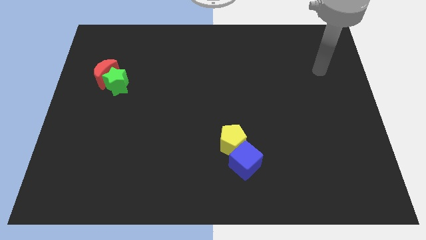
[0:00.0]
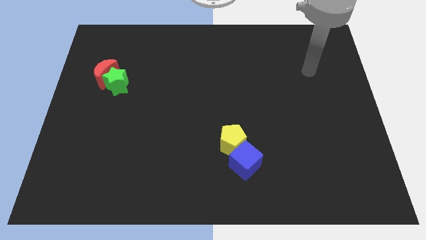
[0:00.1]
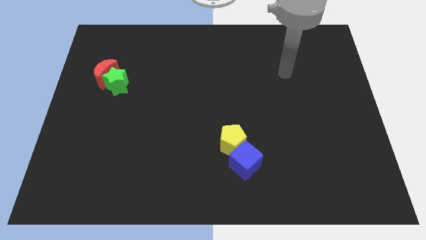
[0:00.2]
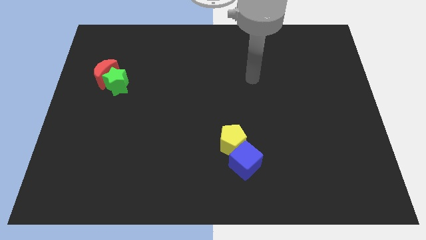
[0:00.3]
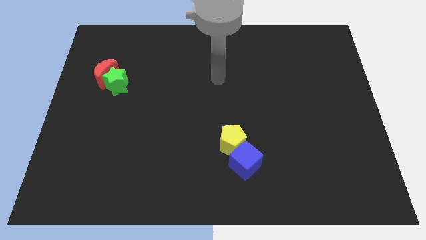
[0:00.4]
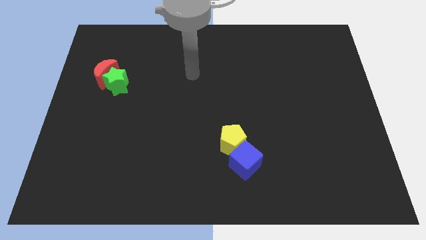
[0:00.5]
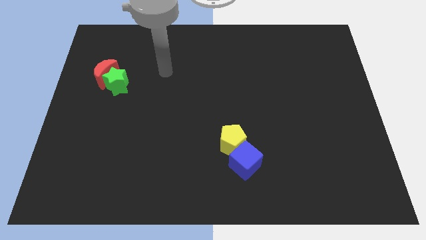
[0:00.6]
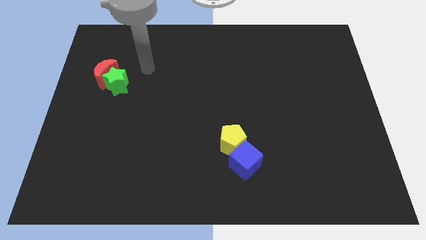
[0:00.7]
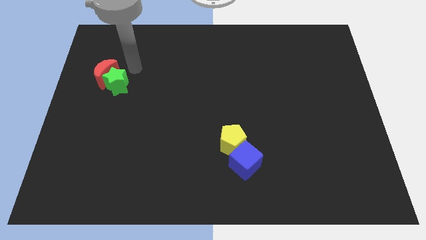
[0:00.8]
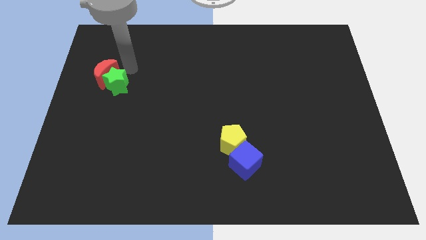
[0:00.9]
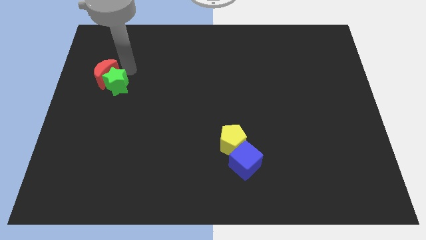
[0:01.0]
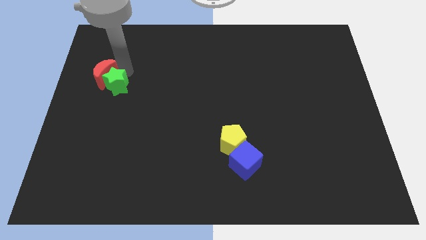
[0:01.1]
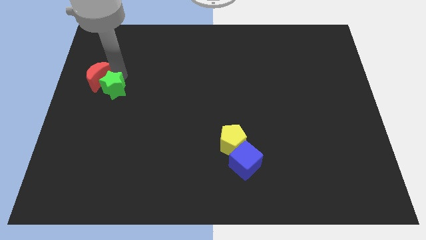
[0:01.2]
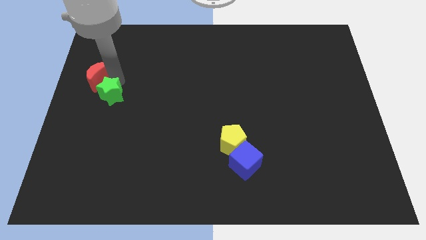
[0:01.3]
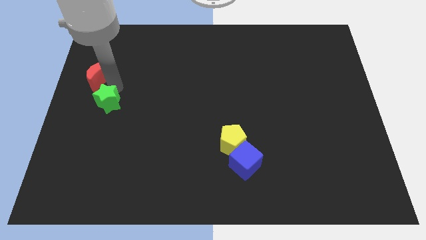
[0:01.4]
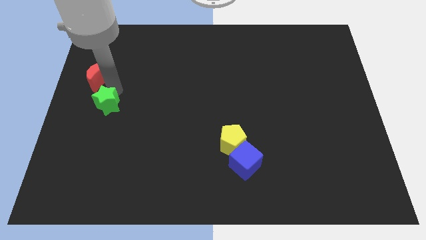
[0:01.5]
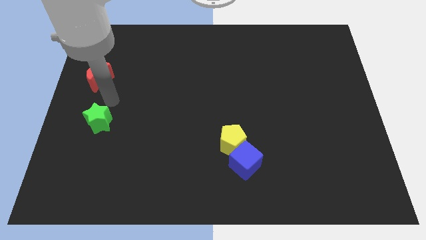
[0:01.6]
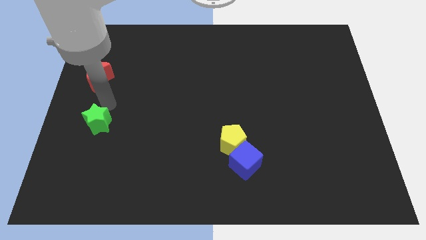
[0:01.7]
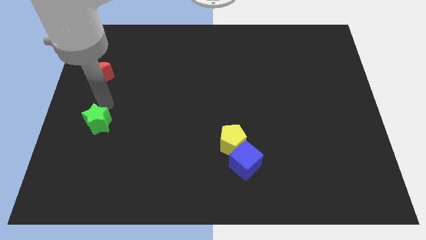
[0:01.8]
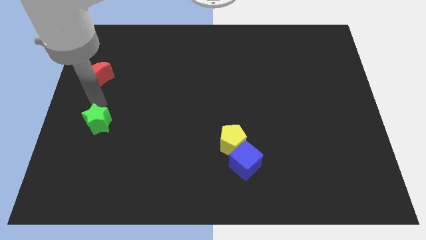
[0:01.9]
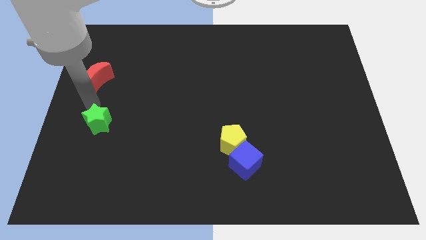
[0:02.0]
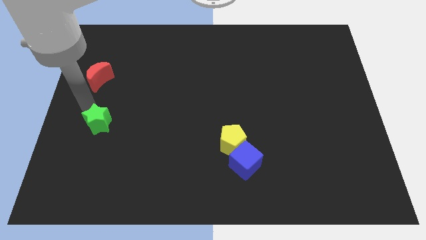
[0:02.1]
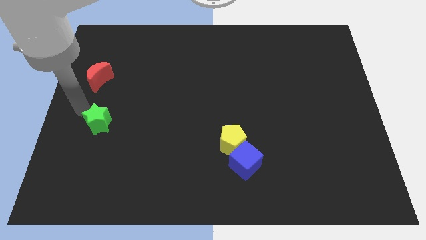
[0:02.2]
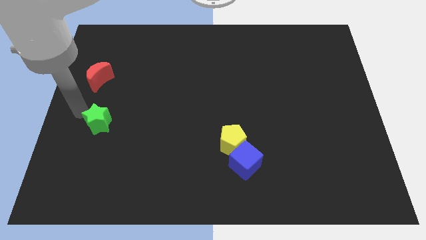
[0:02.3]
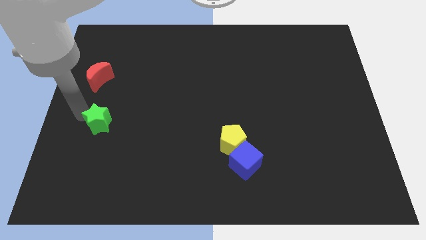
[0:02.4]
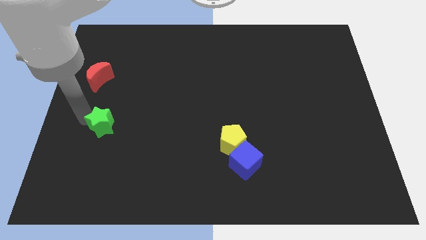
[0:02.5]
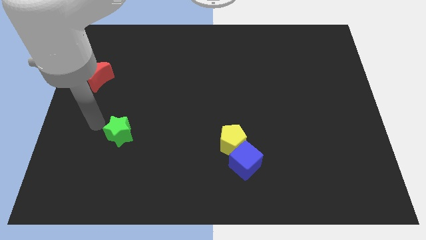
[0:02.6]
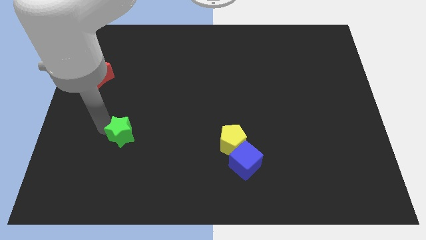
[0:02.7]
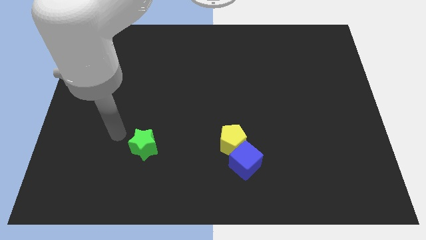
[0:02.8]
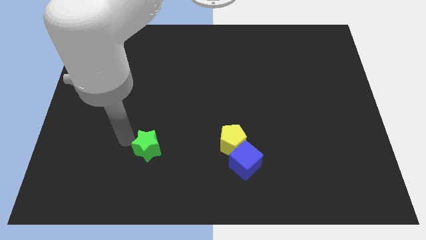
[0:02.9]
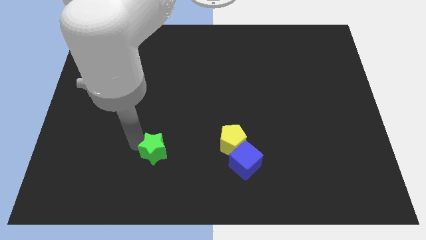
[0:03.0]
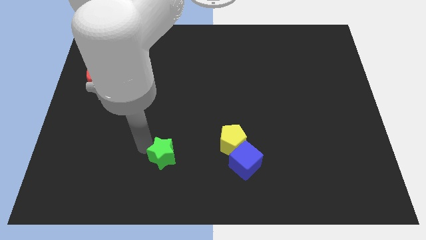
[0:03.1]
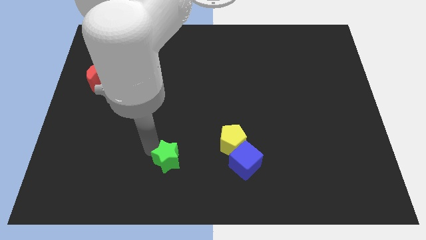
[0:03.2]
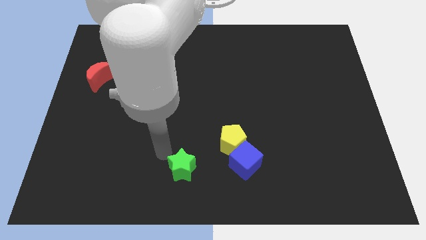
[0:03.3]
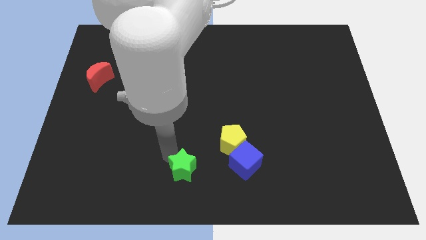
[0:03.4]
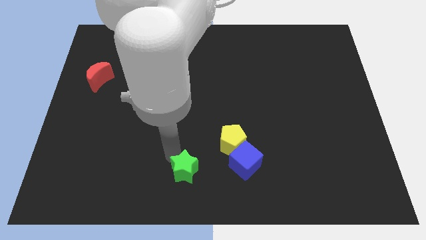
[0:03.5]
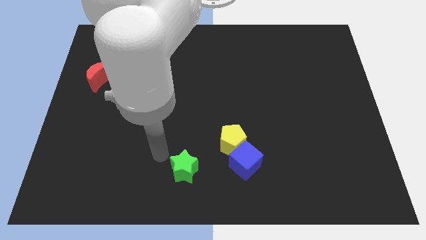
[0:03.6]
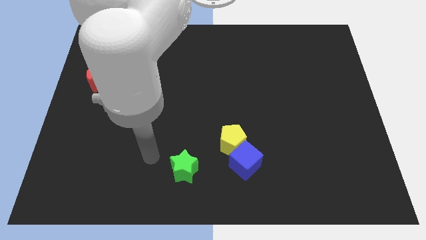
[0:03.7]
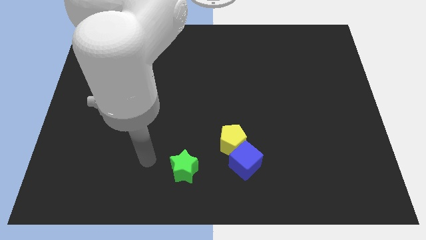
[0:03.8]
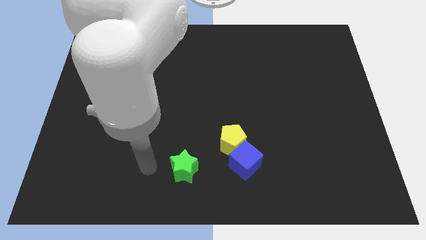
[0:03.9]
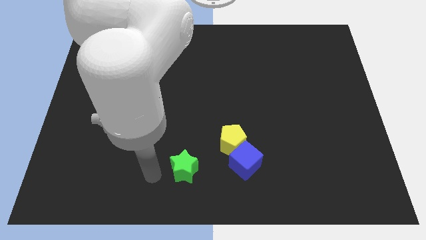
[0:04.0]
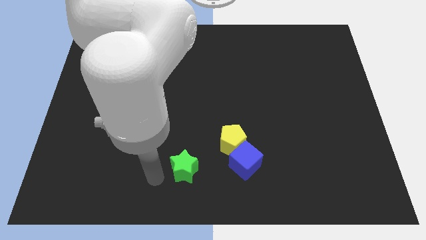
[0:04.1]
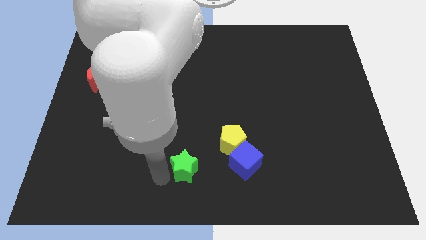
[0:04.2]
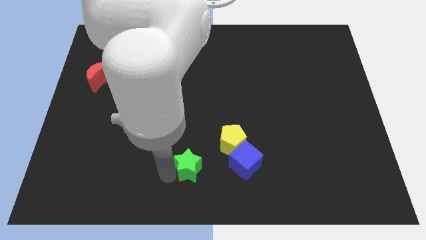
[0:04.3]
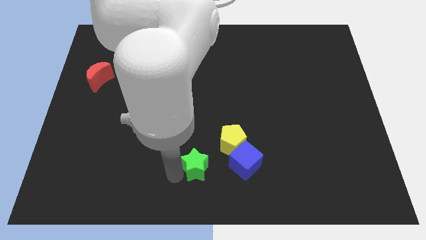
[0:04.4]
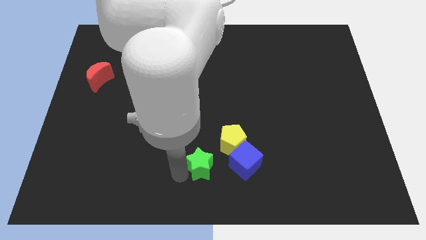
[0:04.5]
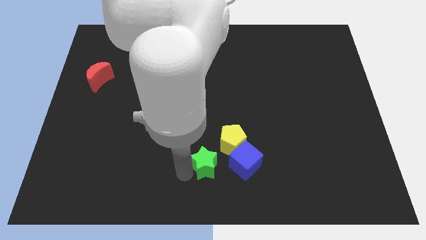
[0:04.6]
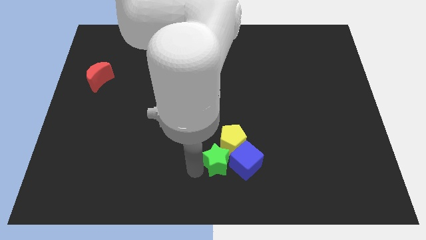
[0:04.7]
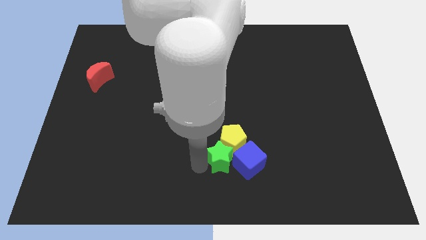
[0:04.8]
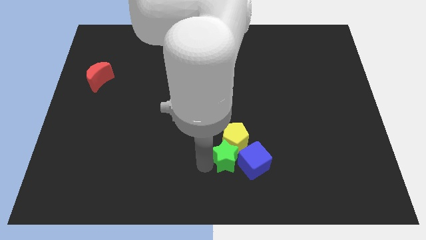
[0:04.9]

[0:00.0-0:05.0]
slide the star to the blue cube

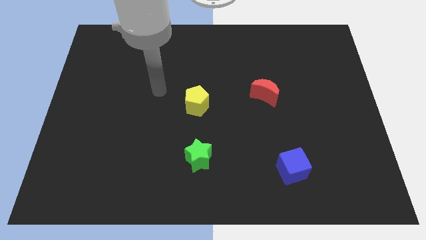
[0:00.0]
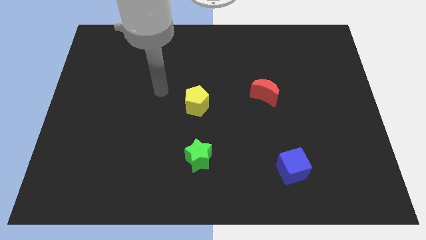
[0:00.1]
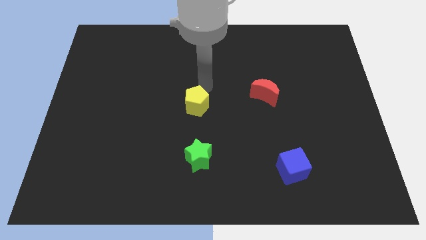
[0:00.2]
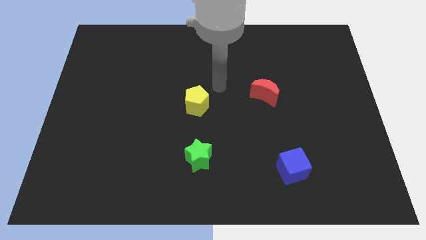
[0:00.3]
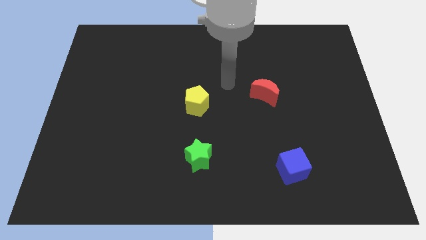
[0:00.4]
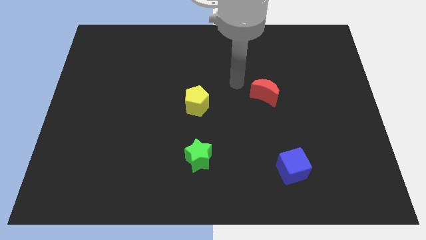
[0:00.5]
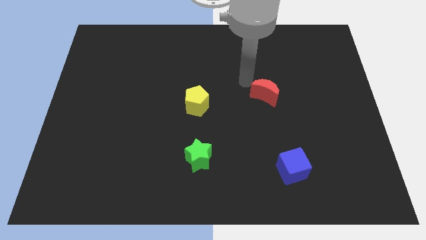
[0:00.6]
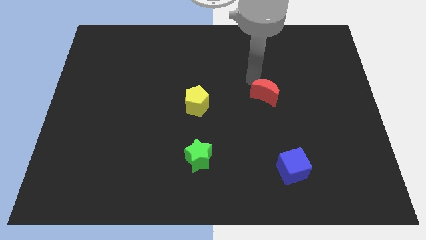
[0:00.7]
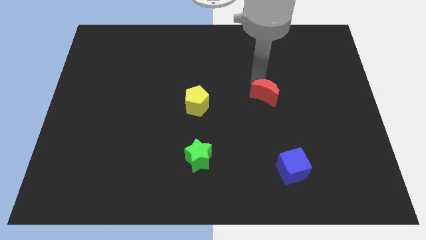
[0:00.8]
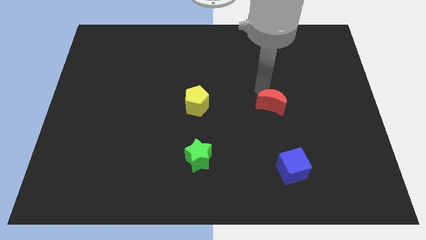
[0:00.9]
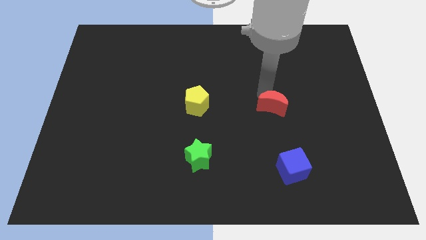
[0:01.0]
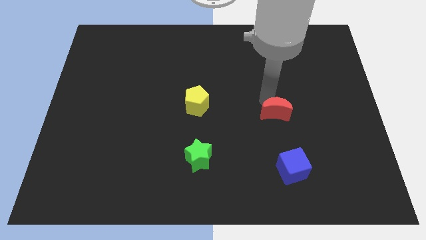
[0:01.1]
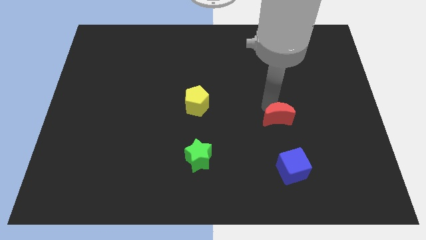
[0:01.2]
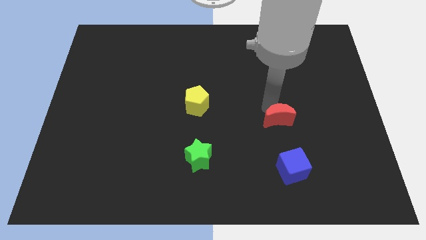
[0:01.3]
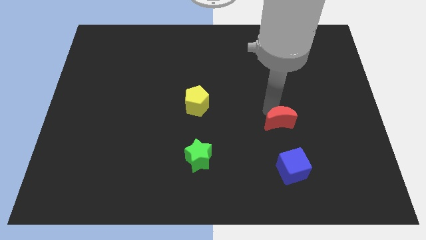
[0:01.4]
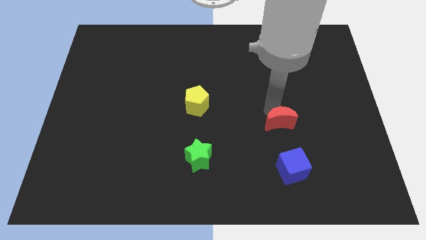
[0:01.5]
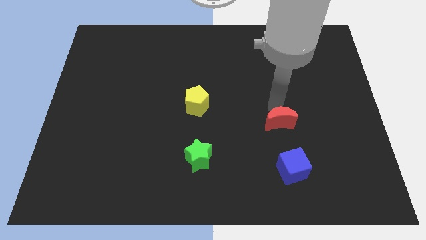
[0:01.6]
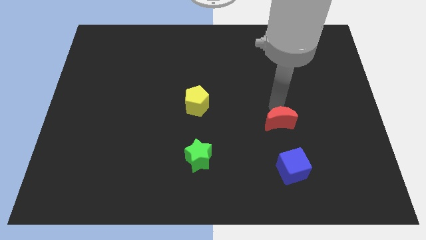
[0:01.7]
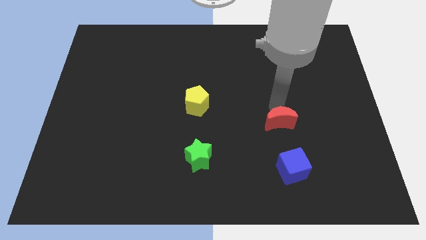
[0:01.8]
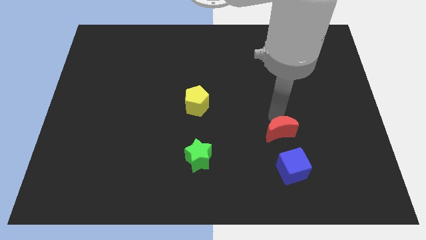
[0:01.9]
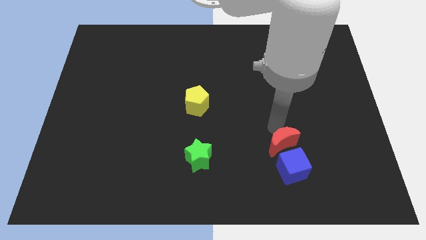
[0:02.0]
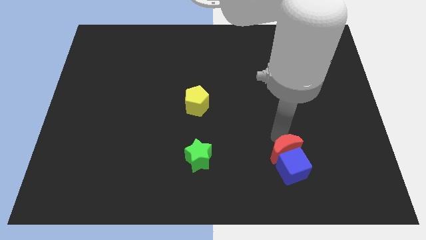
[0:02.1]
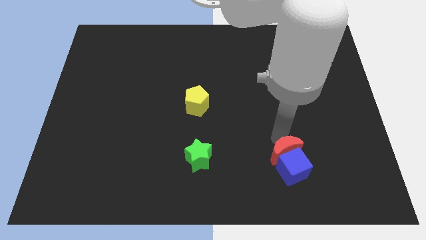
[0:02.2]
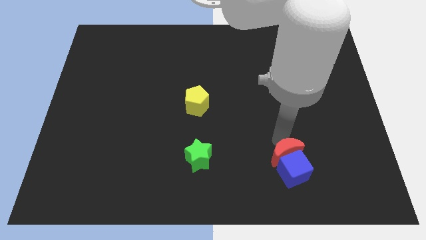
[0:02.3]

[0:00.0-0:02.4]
move the moon towards the cube

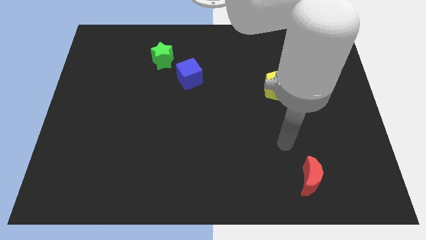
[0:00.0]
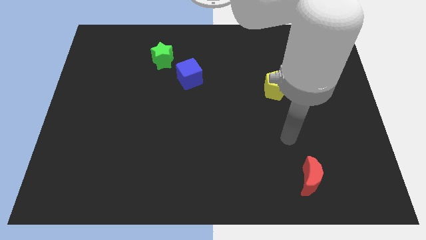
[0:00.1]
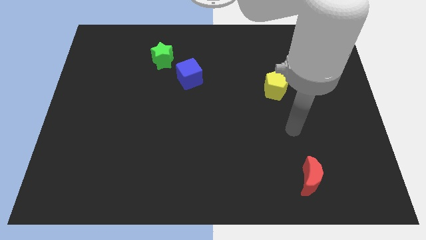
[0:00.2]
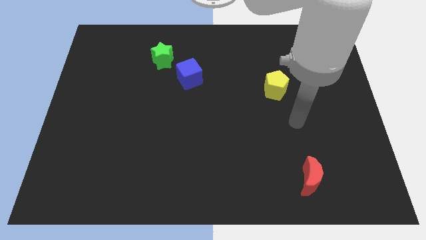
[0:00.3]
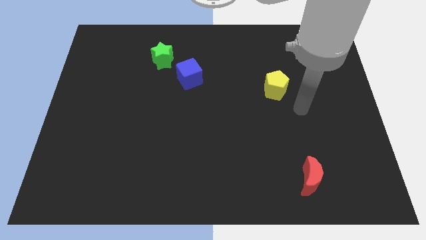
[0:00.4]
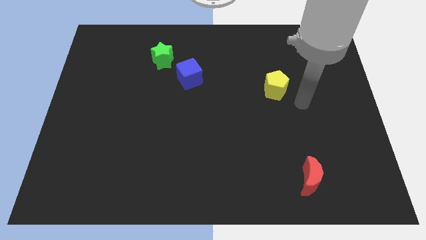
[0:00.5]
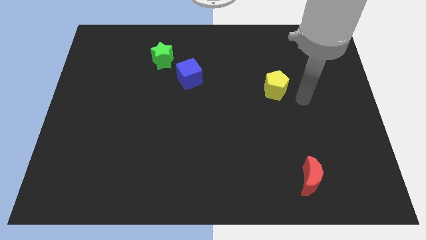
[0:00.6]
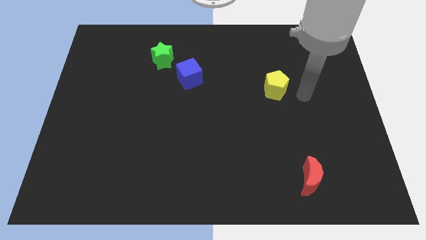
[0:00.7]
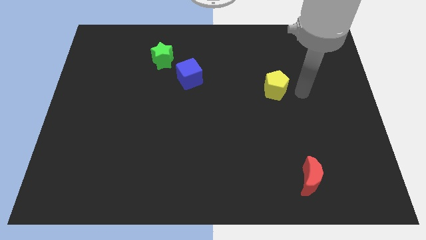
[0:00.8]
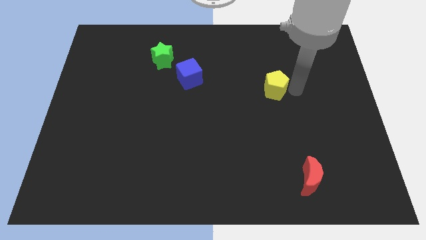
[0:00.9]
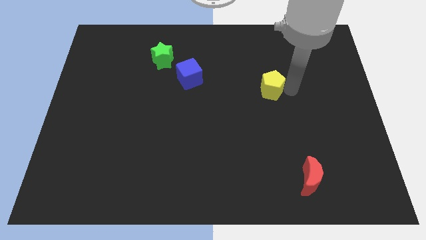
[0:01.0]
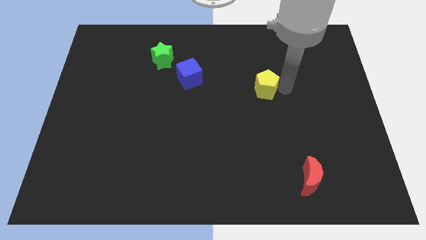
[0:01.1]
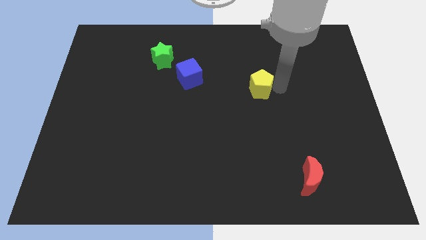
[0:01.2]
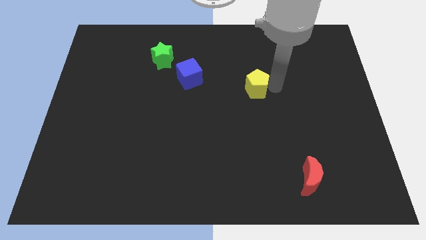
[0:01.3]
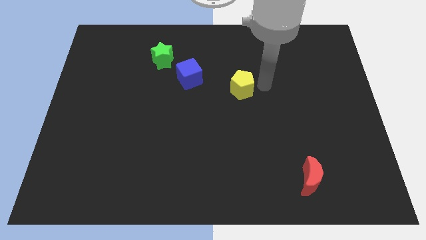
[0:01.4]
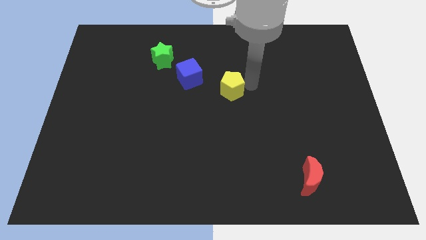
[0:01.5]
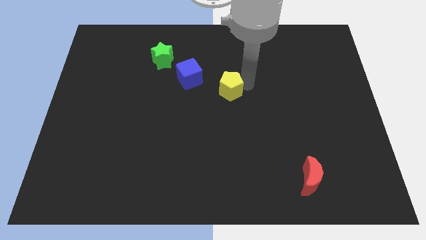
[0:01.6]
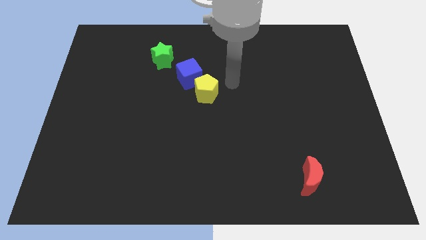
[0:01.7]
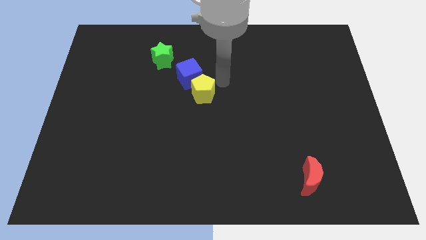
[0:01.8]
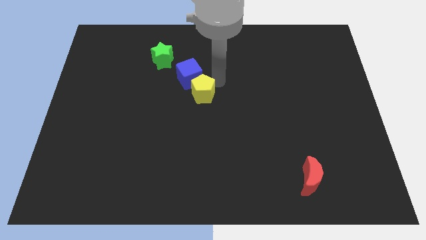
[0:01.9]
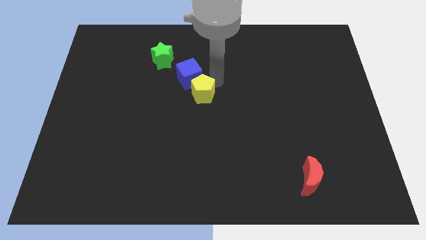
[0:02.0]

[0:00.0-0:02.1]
push the yellow pentagon next to the blue block
